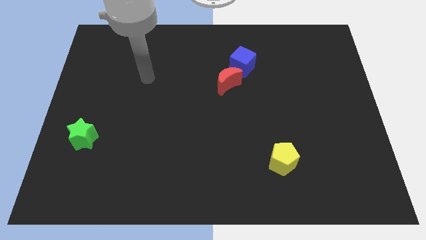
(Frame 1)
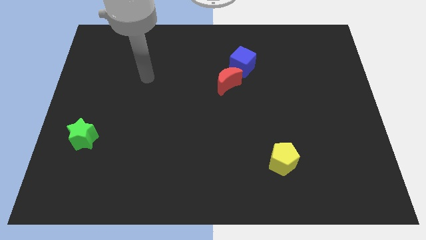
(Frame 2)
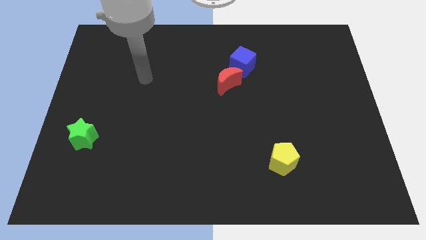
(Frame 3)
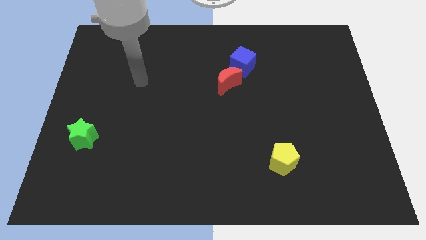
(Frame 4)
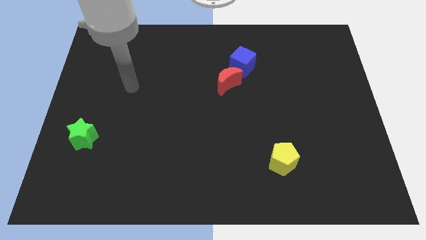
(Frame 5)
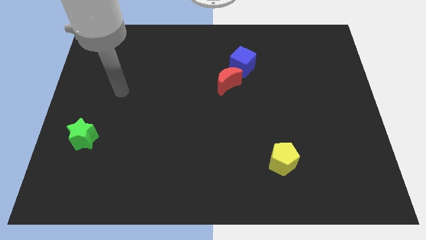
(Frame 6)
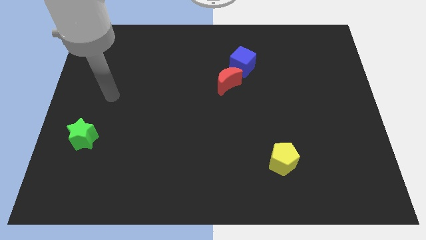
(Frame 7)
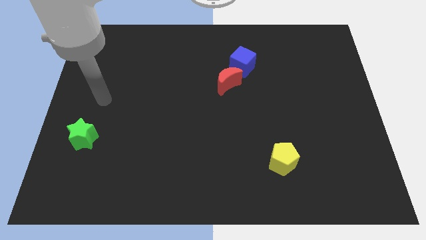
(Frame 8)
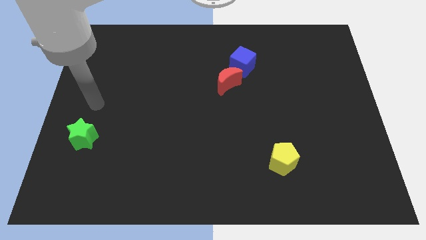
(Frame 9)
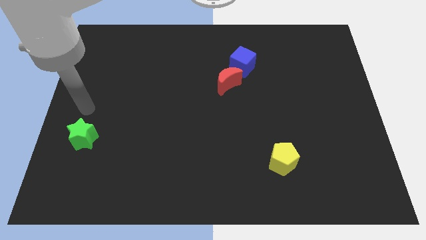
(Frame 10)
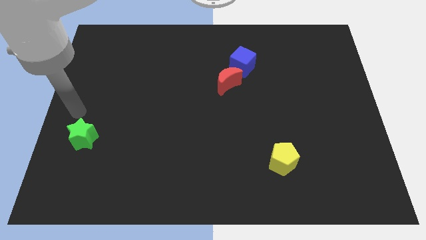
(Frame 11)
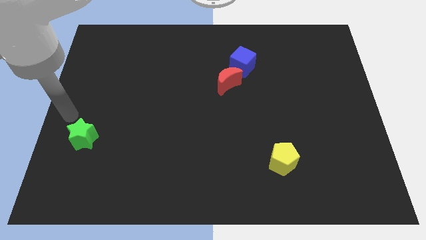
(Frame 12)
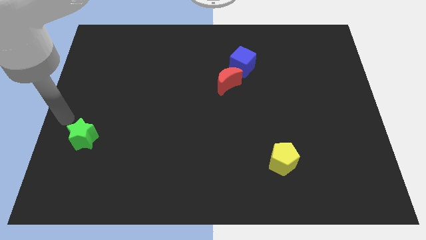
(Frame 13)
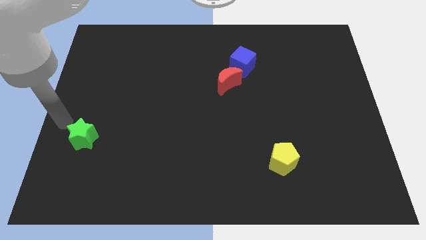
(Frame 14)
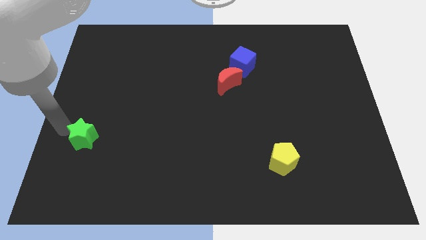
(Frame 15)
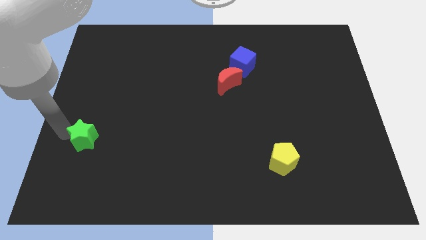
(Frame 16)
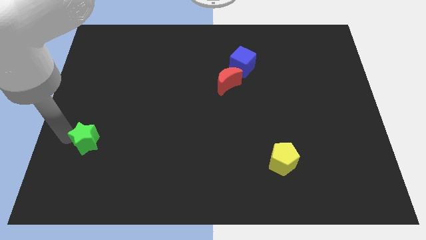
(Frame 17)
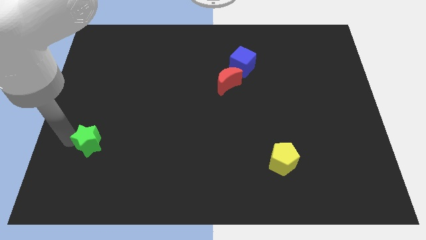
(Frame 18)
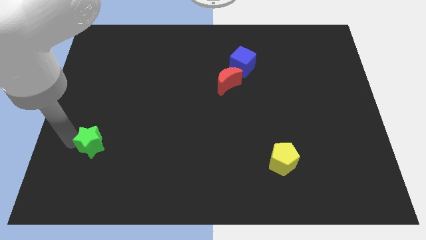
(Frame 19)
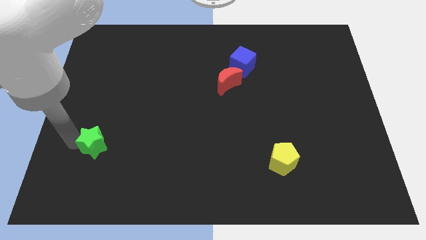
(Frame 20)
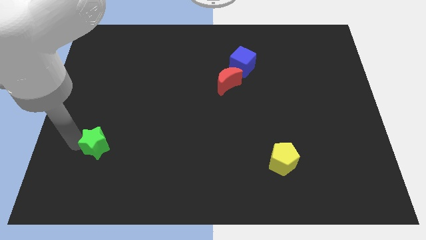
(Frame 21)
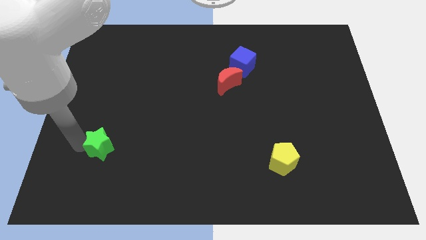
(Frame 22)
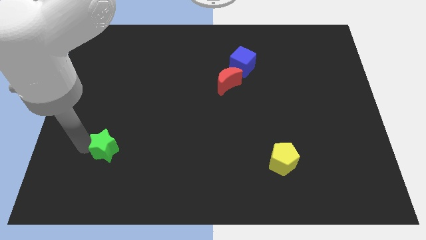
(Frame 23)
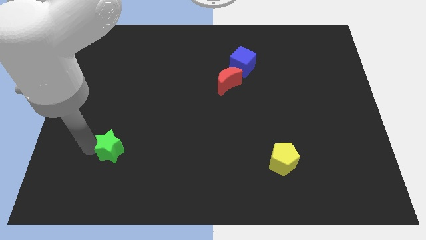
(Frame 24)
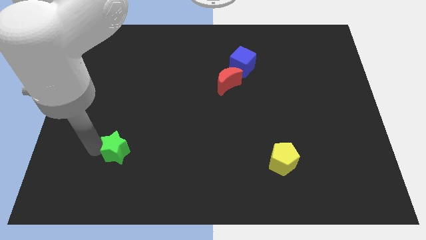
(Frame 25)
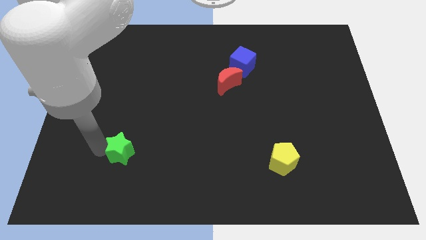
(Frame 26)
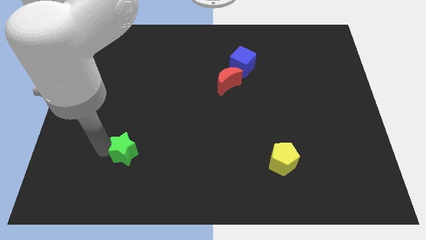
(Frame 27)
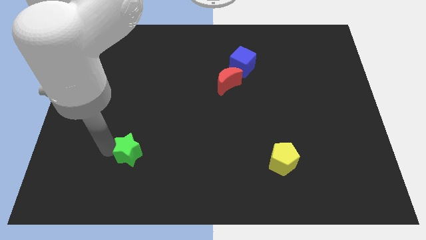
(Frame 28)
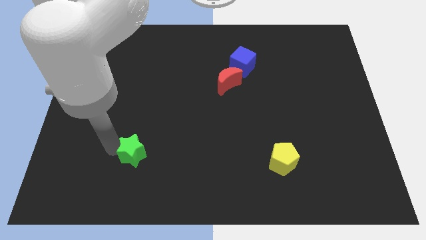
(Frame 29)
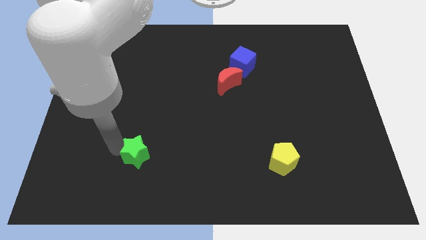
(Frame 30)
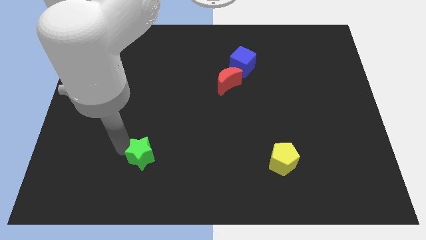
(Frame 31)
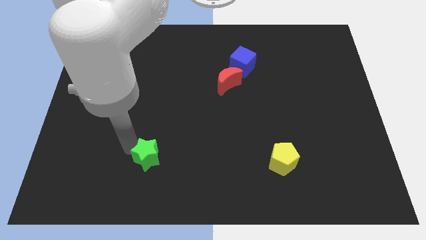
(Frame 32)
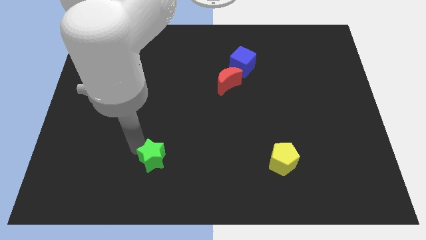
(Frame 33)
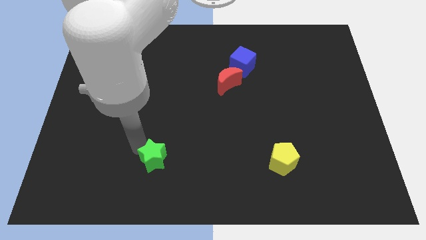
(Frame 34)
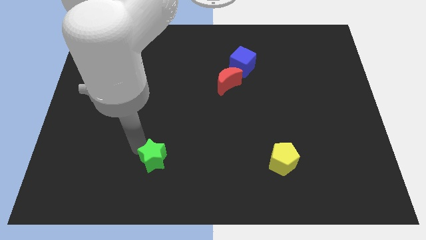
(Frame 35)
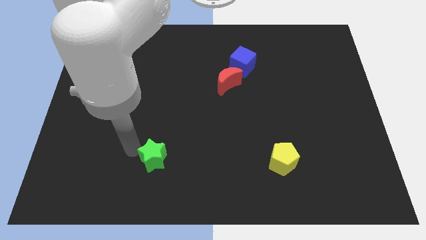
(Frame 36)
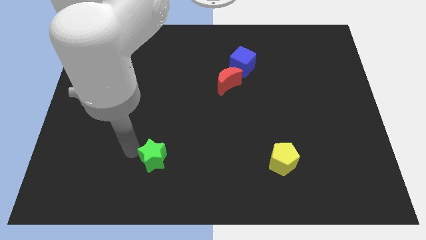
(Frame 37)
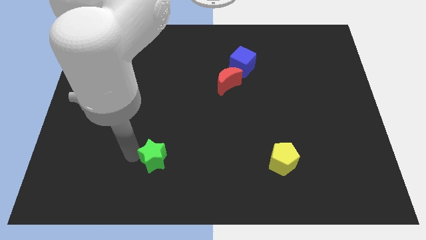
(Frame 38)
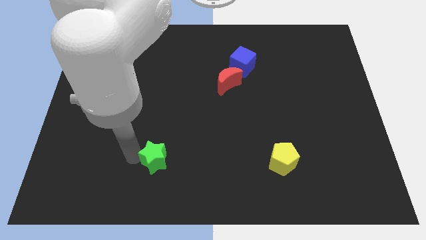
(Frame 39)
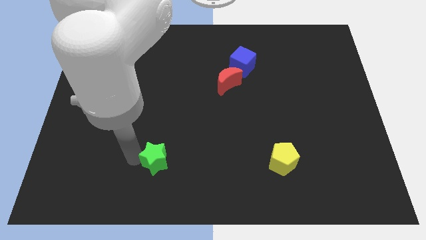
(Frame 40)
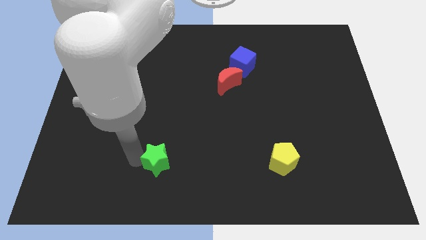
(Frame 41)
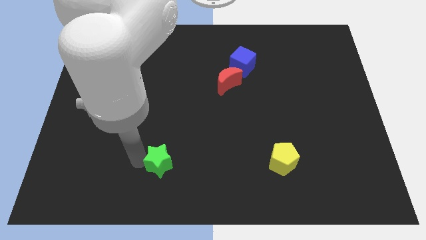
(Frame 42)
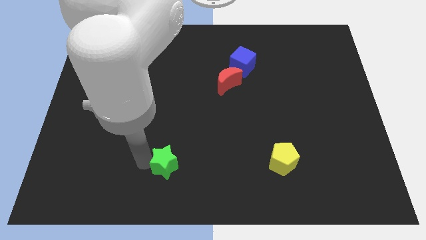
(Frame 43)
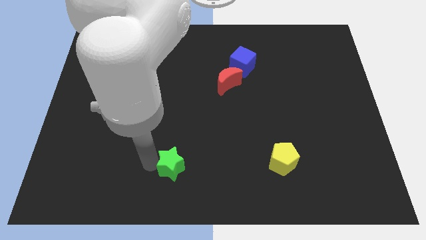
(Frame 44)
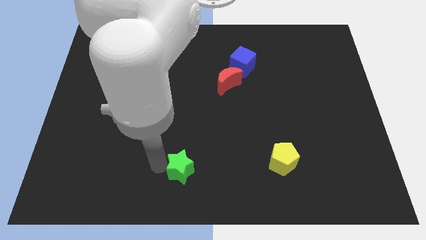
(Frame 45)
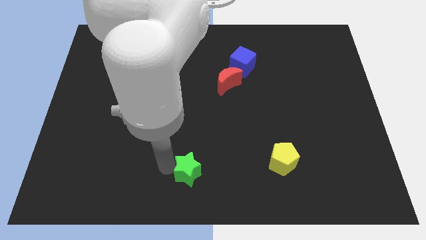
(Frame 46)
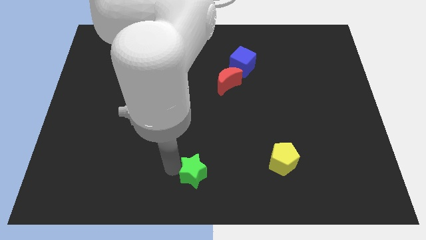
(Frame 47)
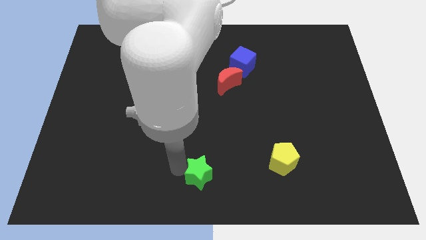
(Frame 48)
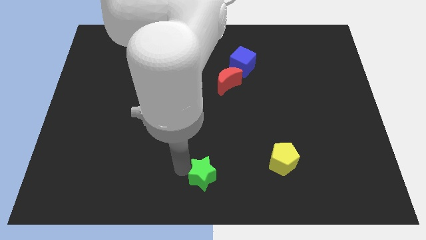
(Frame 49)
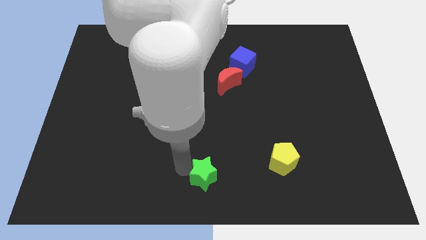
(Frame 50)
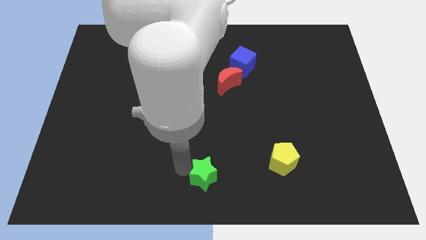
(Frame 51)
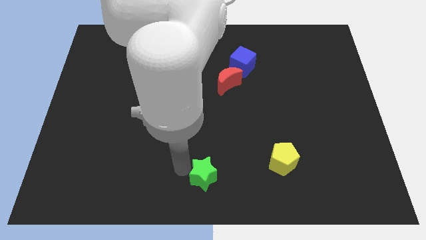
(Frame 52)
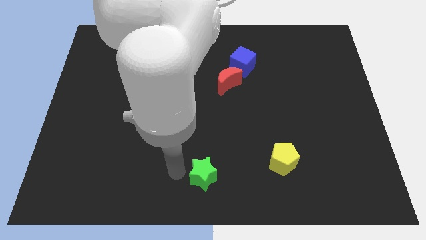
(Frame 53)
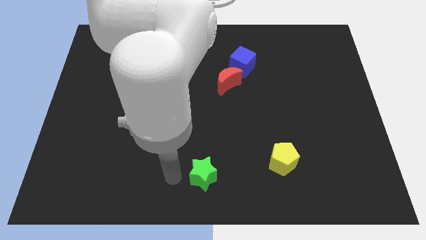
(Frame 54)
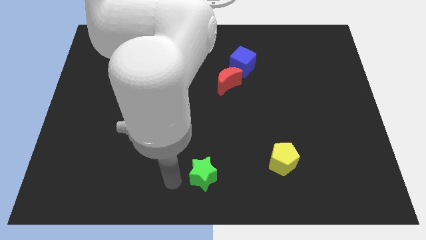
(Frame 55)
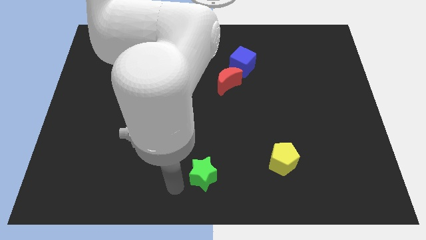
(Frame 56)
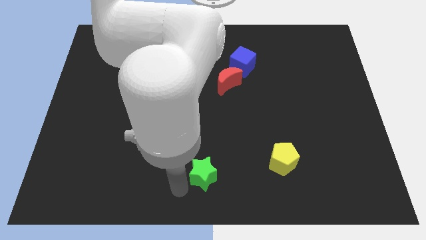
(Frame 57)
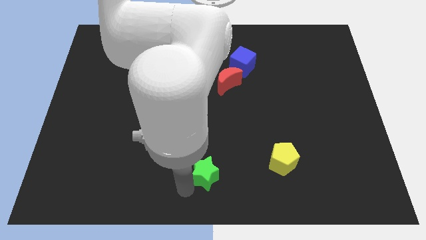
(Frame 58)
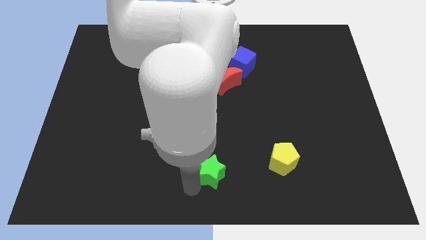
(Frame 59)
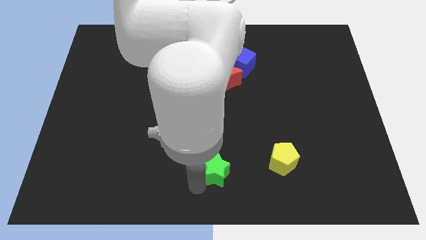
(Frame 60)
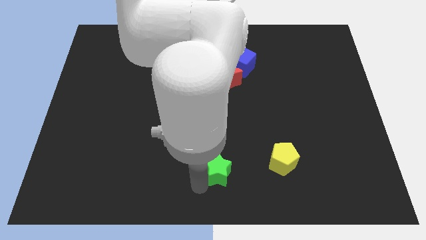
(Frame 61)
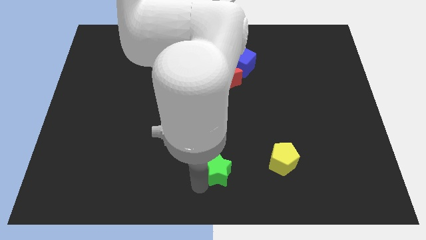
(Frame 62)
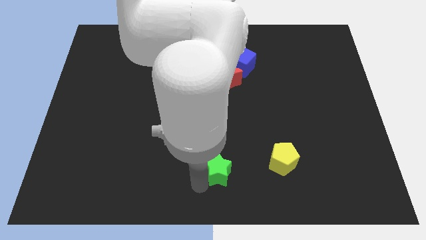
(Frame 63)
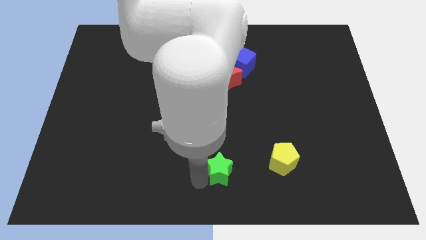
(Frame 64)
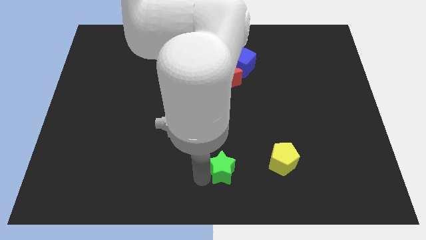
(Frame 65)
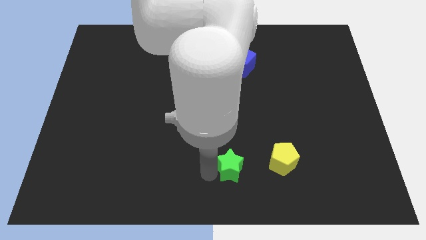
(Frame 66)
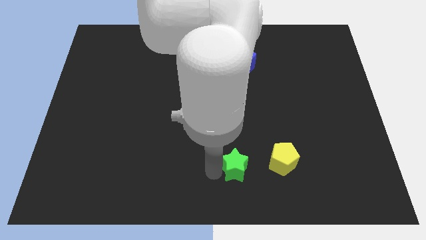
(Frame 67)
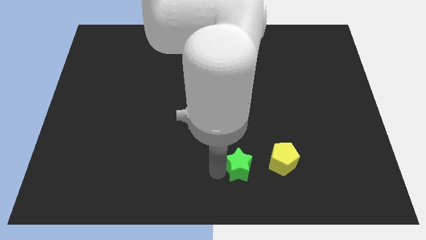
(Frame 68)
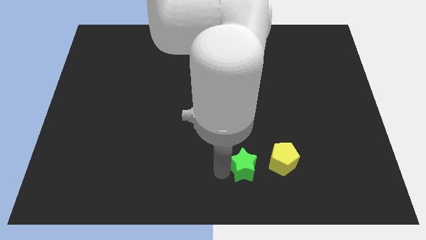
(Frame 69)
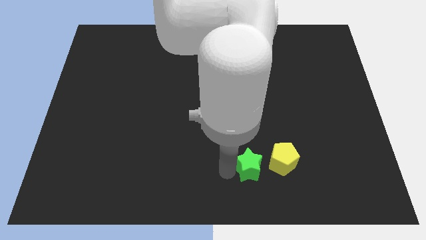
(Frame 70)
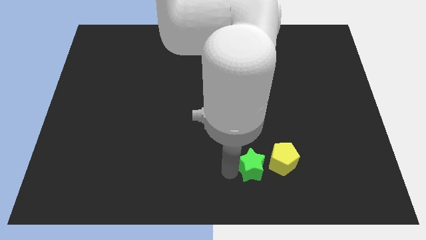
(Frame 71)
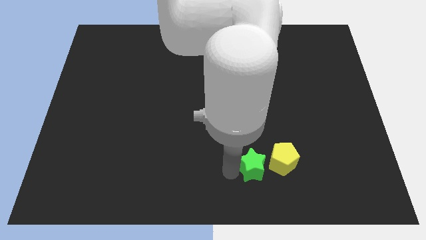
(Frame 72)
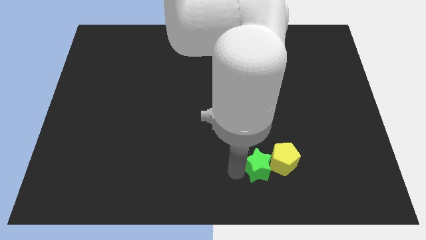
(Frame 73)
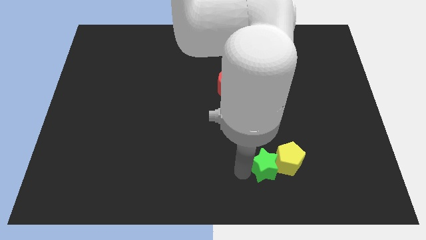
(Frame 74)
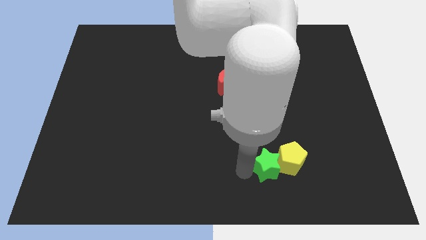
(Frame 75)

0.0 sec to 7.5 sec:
push the green star towards the yellow pentagon

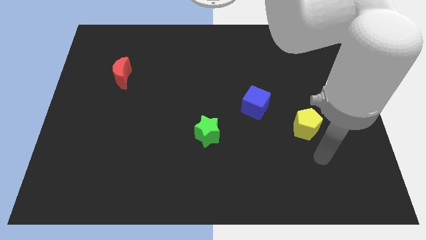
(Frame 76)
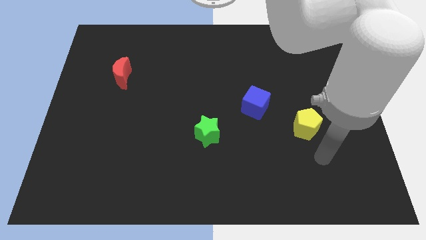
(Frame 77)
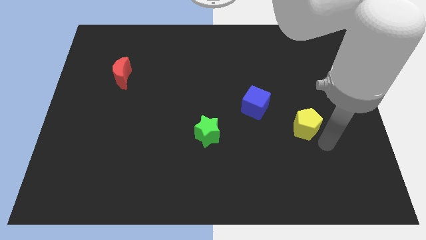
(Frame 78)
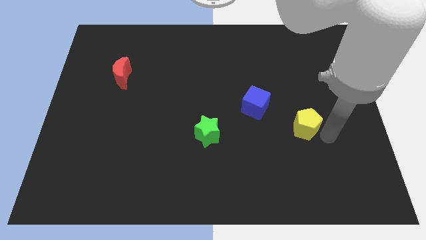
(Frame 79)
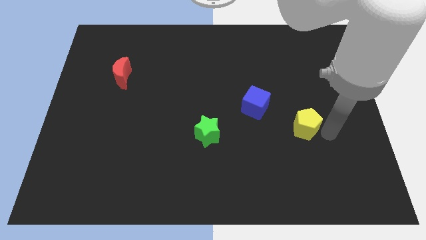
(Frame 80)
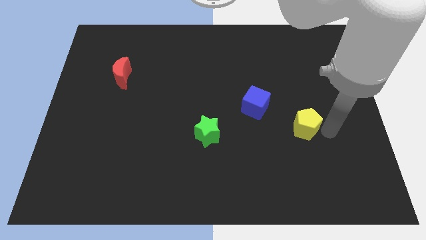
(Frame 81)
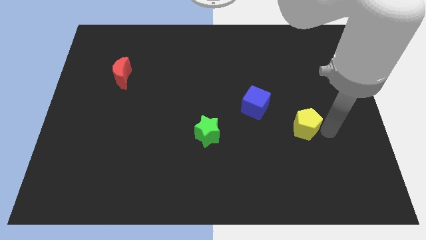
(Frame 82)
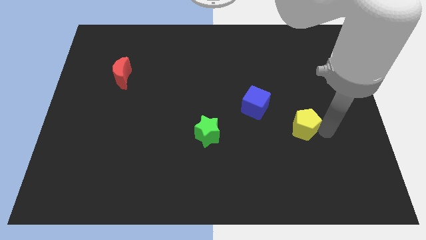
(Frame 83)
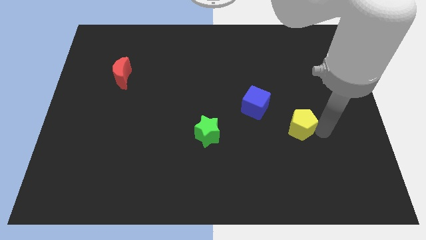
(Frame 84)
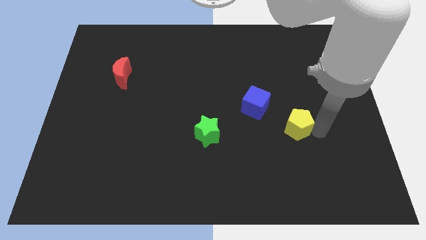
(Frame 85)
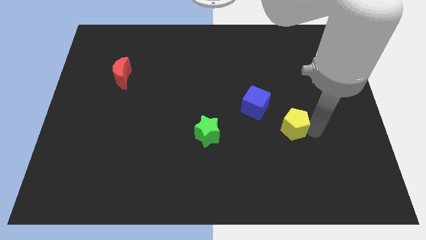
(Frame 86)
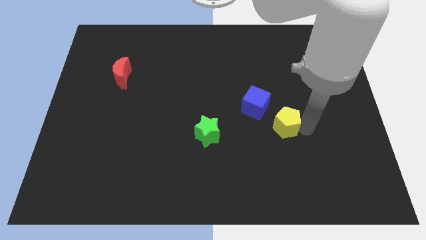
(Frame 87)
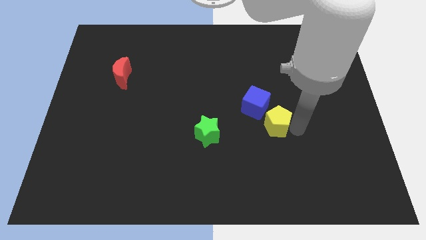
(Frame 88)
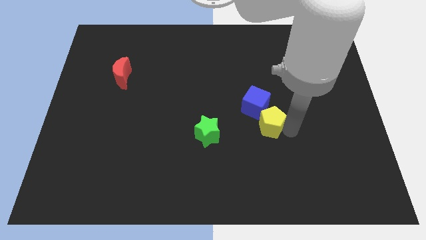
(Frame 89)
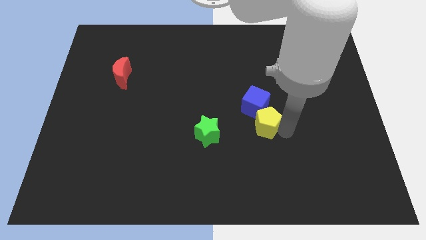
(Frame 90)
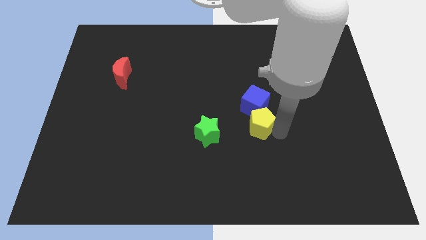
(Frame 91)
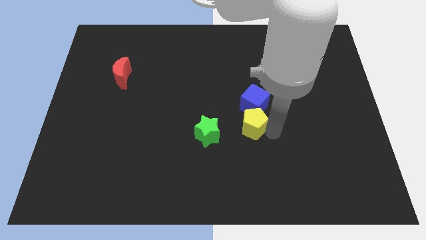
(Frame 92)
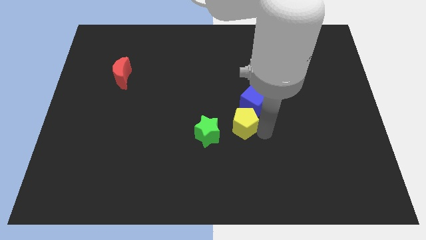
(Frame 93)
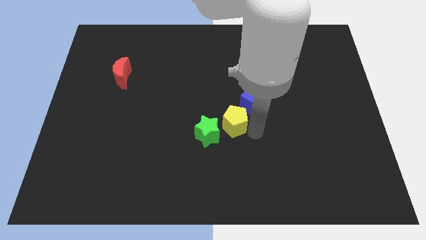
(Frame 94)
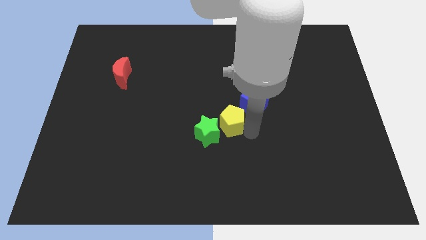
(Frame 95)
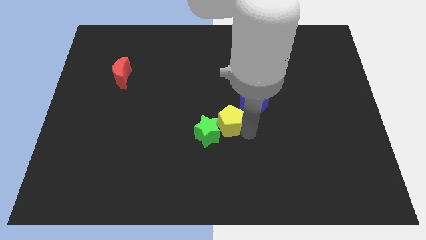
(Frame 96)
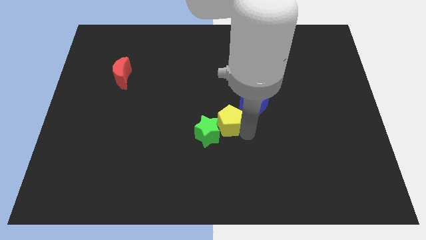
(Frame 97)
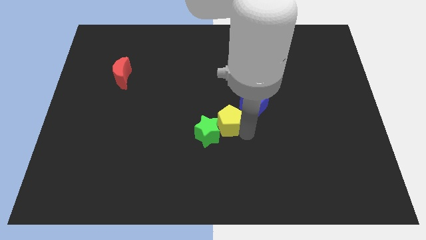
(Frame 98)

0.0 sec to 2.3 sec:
slide the yellow block next to the green star
